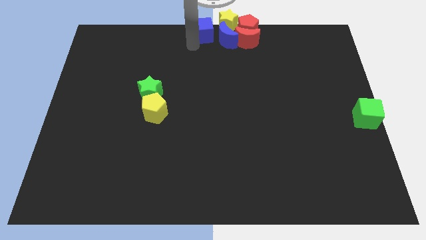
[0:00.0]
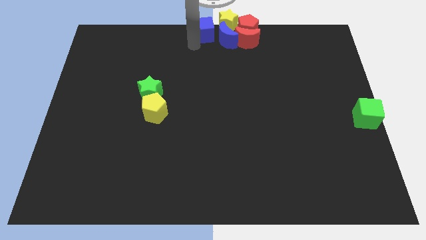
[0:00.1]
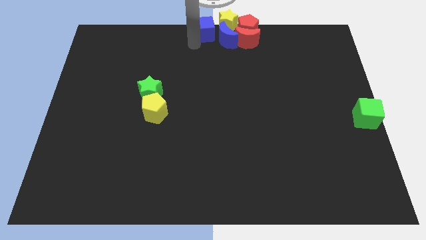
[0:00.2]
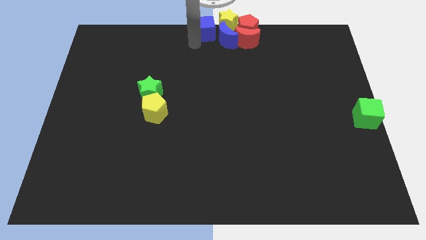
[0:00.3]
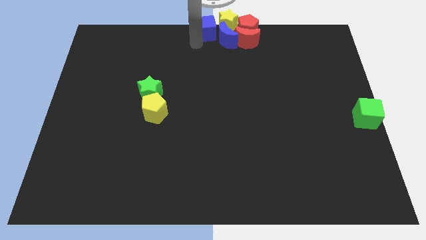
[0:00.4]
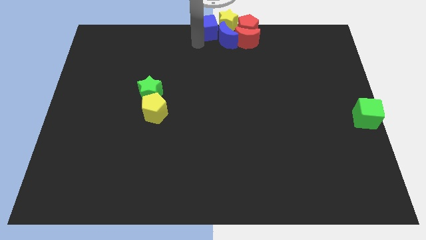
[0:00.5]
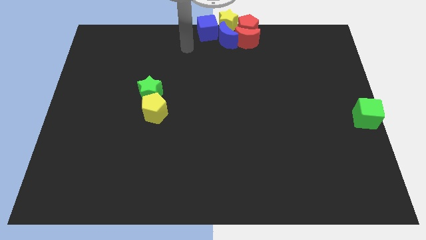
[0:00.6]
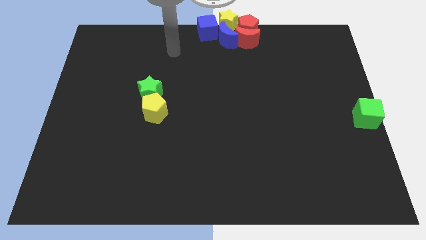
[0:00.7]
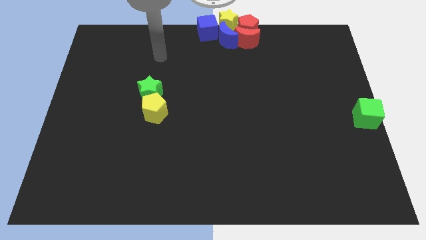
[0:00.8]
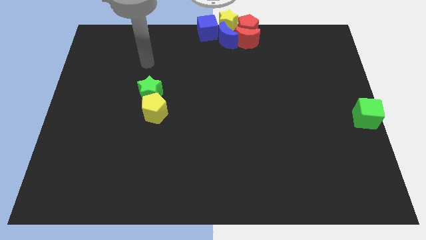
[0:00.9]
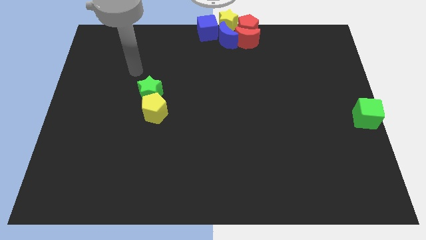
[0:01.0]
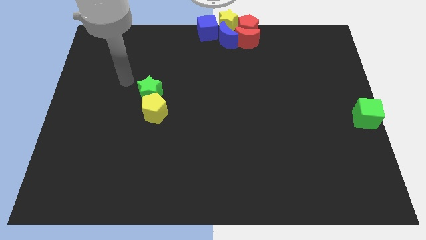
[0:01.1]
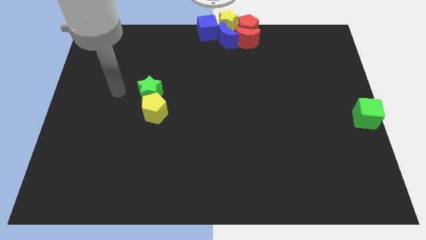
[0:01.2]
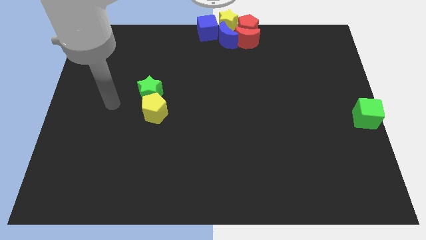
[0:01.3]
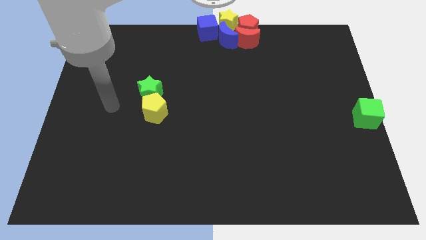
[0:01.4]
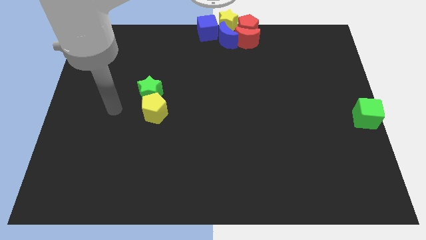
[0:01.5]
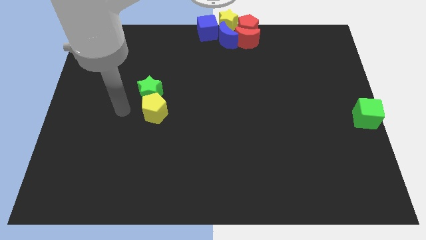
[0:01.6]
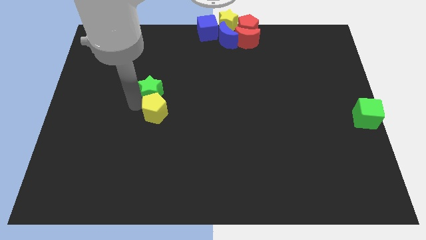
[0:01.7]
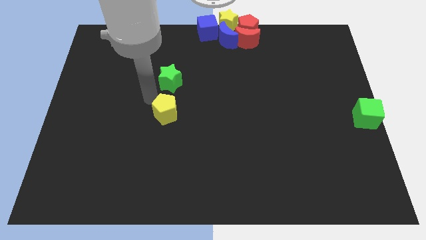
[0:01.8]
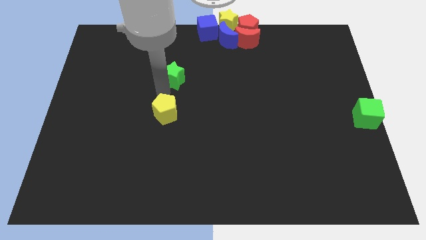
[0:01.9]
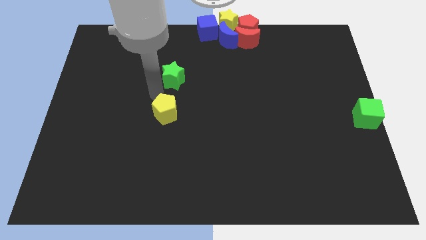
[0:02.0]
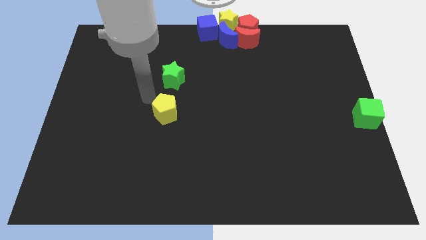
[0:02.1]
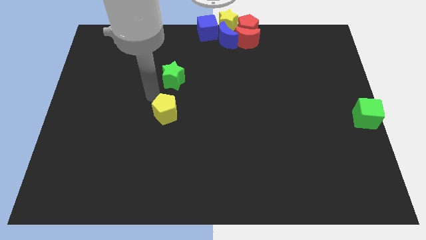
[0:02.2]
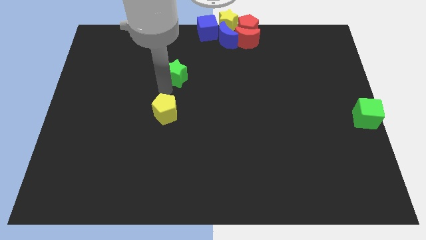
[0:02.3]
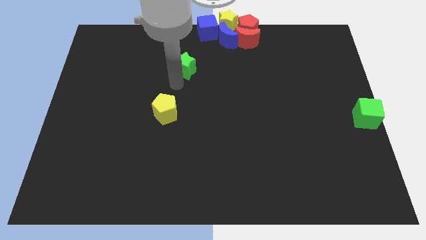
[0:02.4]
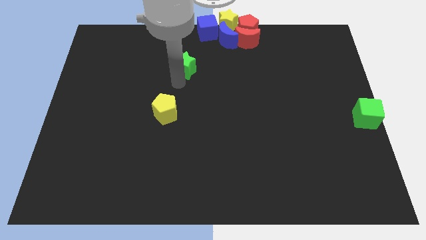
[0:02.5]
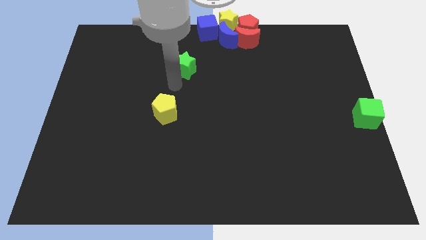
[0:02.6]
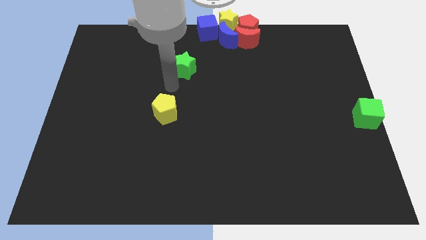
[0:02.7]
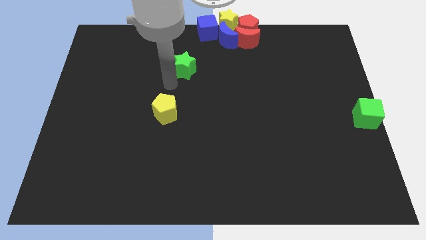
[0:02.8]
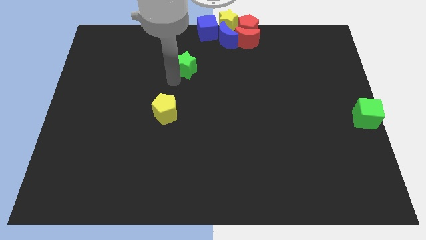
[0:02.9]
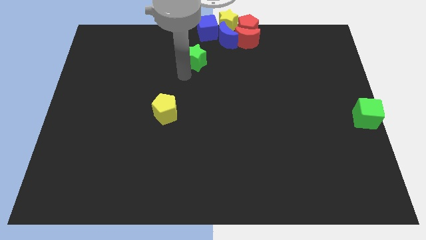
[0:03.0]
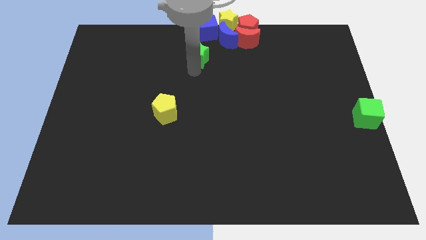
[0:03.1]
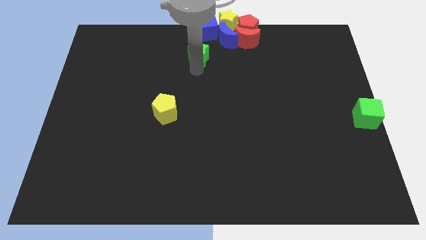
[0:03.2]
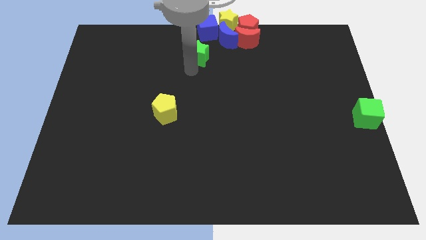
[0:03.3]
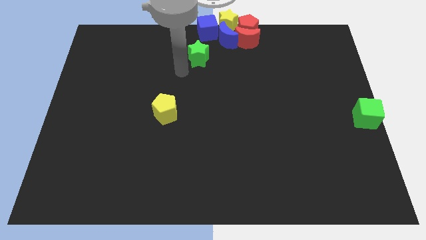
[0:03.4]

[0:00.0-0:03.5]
separate the green star from the yellow pentagon

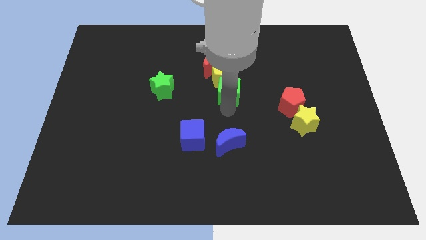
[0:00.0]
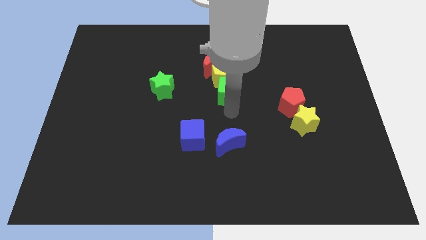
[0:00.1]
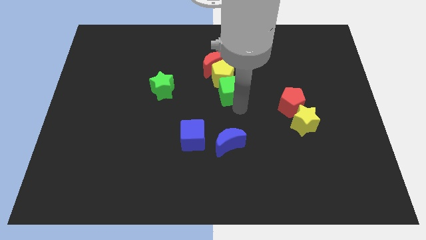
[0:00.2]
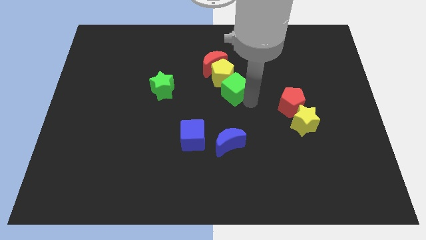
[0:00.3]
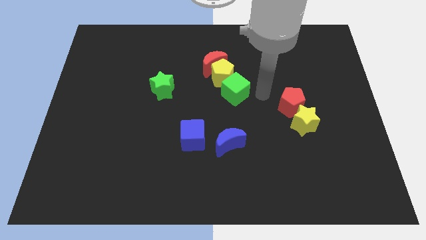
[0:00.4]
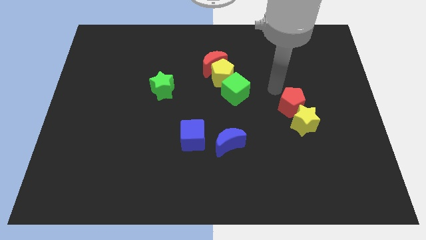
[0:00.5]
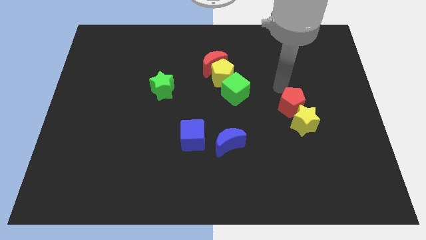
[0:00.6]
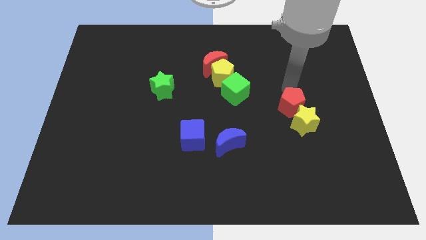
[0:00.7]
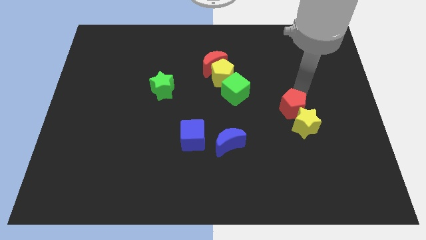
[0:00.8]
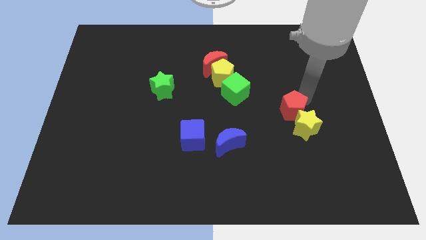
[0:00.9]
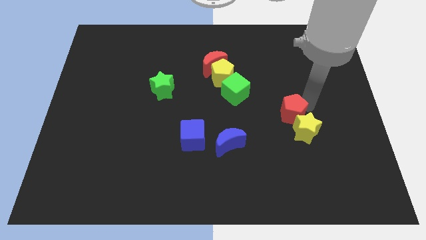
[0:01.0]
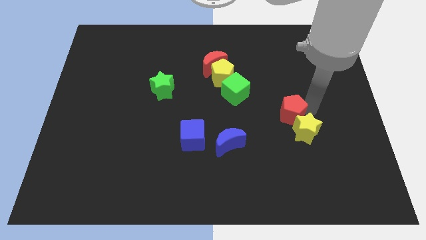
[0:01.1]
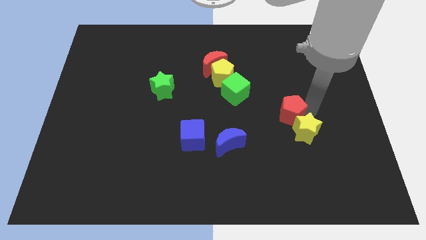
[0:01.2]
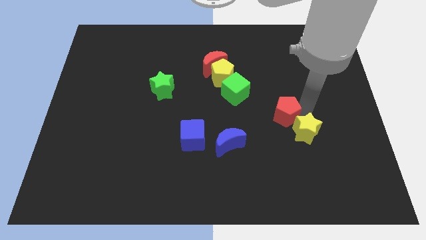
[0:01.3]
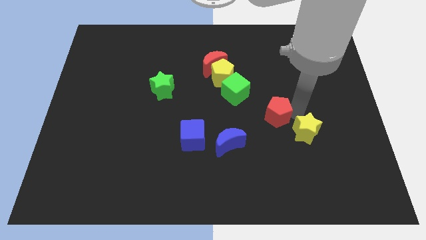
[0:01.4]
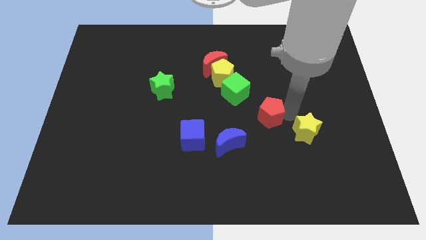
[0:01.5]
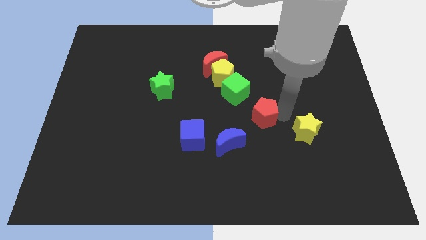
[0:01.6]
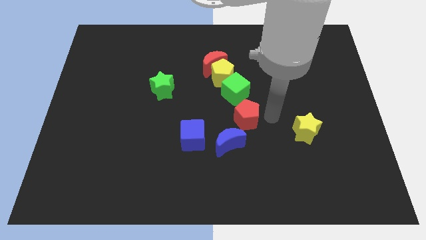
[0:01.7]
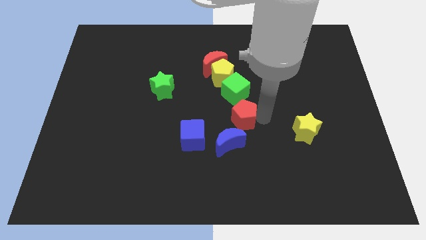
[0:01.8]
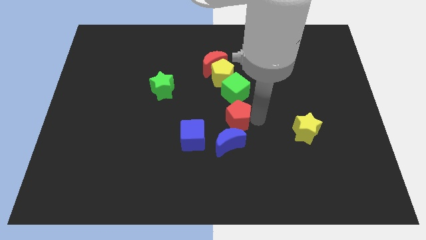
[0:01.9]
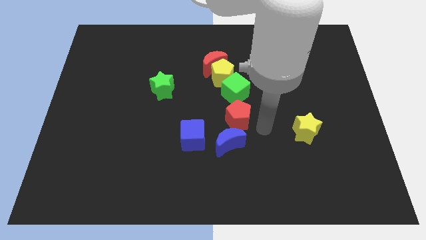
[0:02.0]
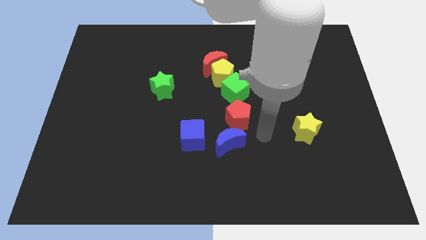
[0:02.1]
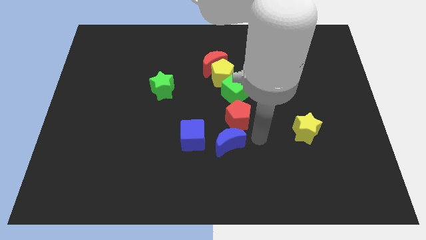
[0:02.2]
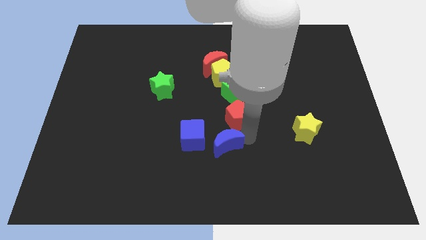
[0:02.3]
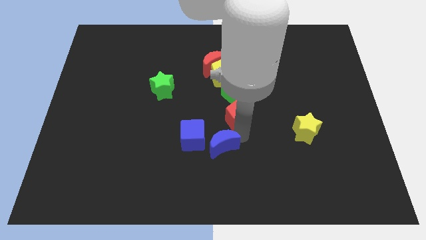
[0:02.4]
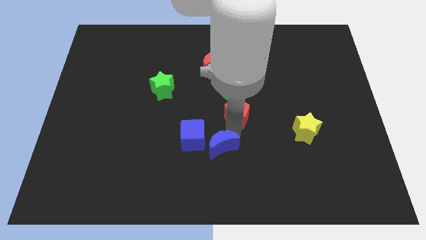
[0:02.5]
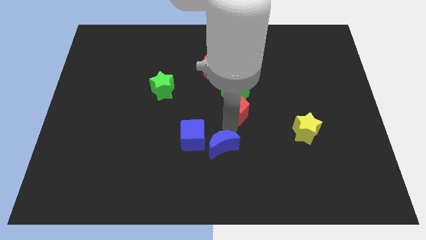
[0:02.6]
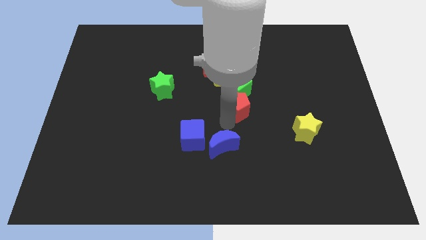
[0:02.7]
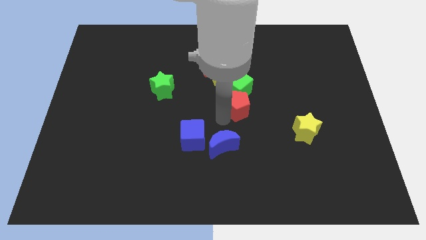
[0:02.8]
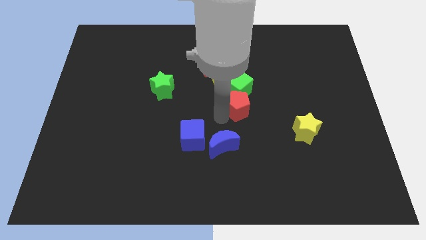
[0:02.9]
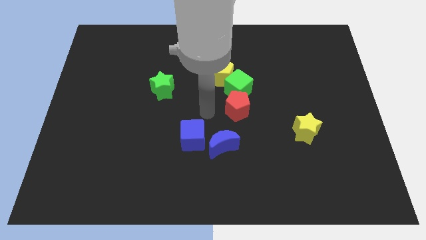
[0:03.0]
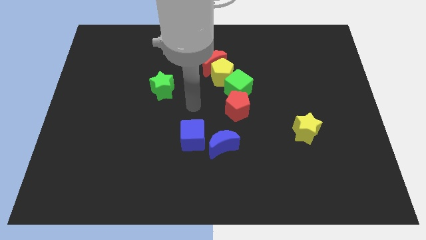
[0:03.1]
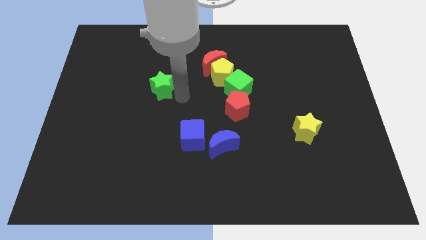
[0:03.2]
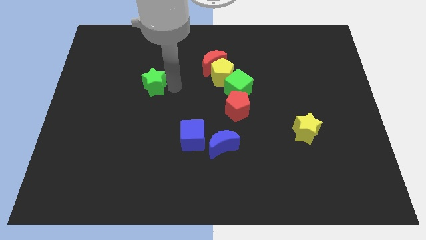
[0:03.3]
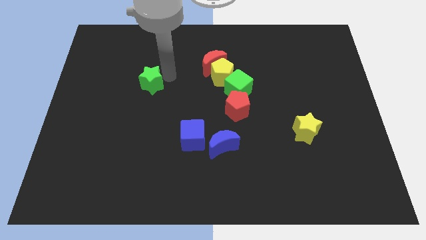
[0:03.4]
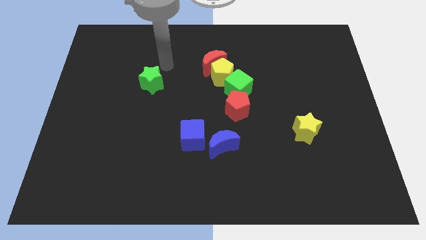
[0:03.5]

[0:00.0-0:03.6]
place the red pentagon below the green cube

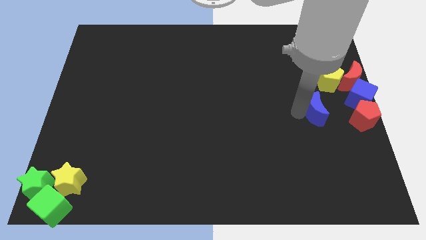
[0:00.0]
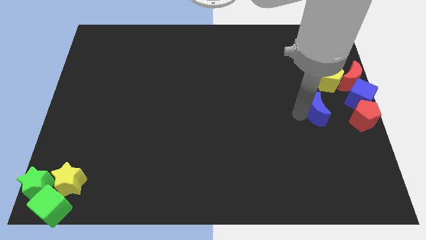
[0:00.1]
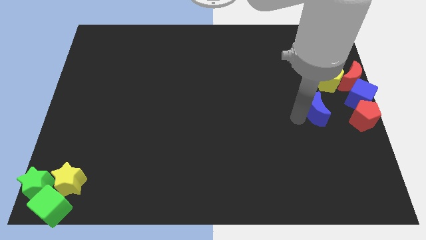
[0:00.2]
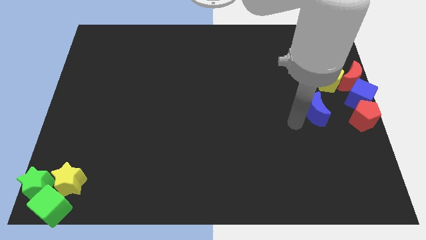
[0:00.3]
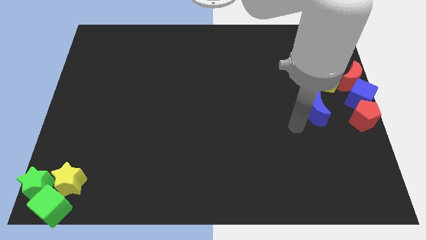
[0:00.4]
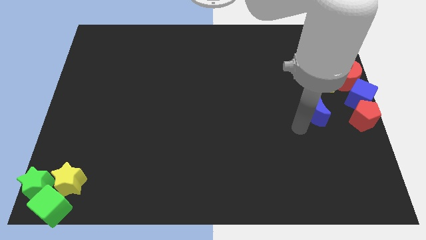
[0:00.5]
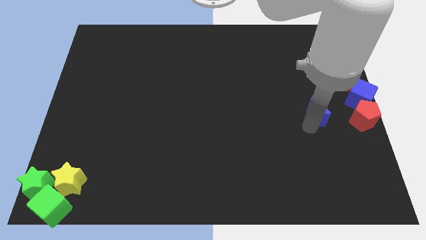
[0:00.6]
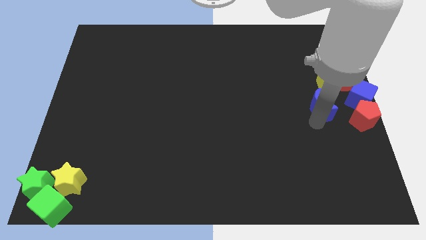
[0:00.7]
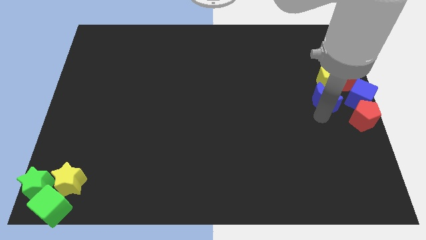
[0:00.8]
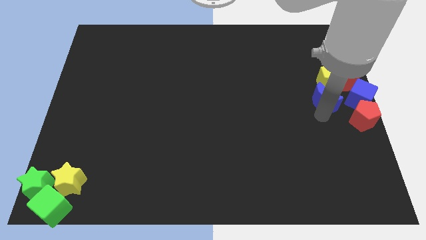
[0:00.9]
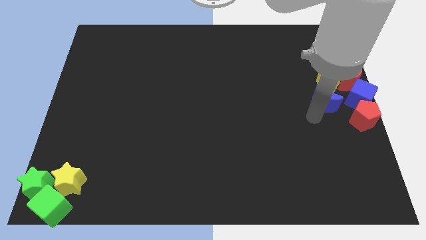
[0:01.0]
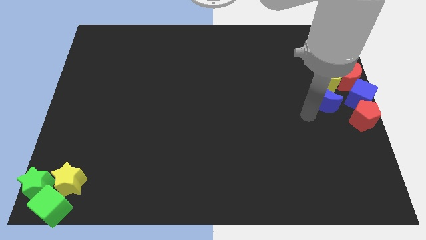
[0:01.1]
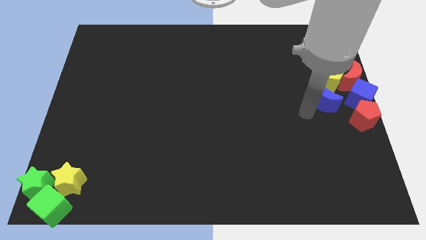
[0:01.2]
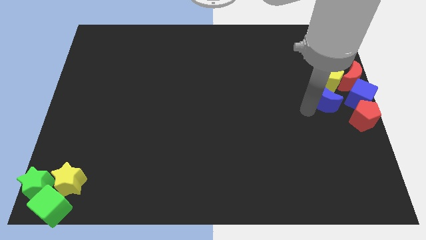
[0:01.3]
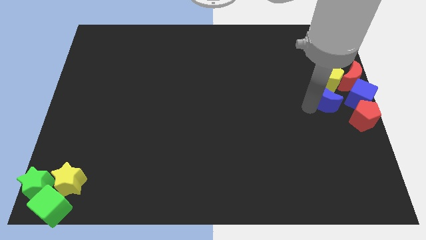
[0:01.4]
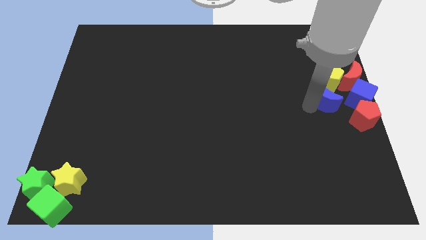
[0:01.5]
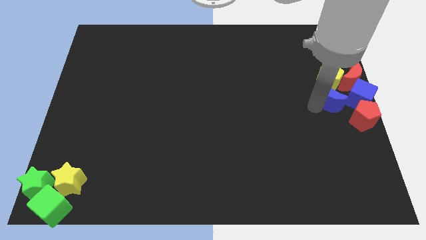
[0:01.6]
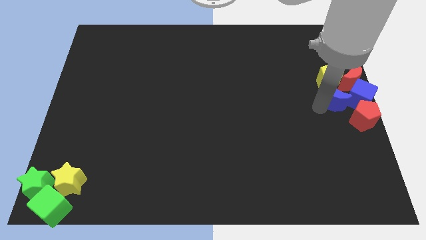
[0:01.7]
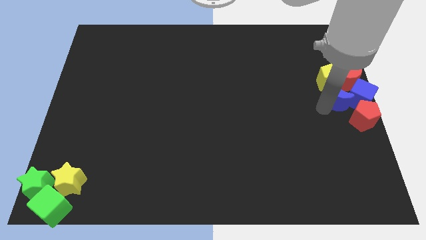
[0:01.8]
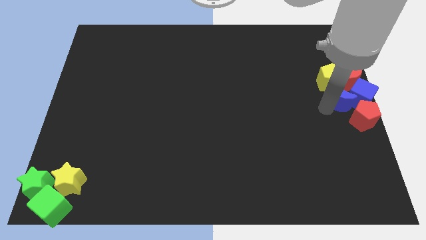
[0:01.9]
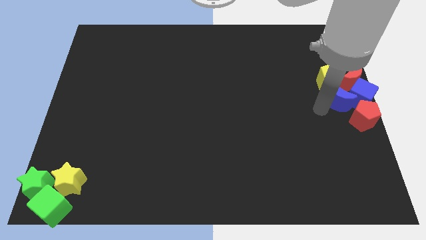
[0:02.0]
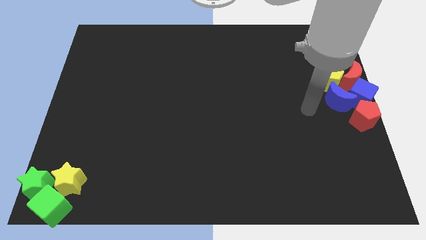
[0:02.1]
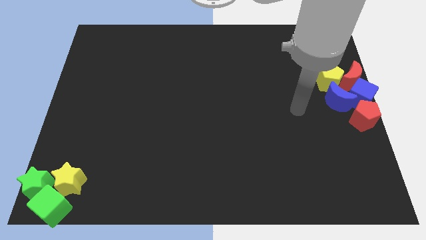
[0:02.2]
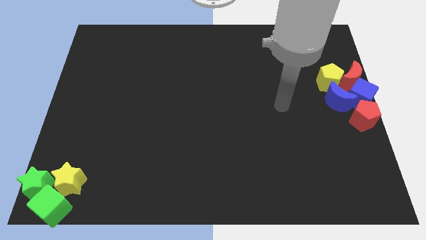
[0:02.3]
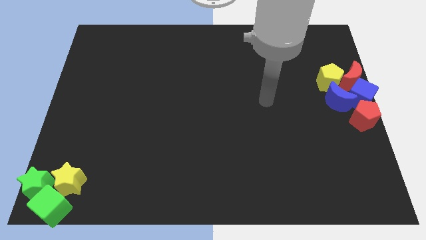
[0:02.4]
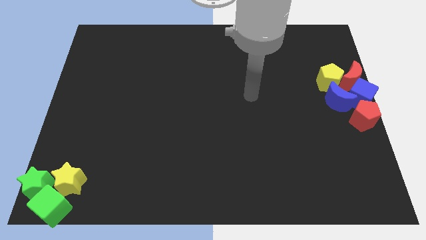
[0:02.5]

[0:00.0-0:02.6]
move the blue crescent to the left side of the blue cube
